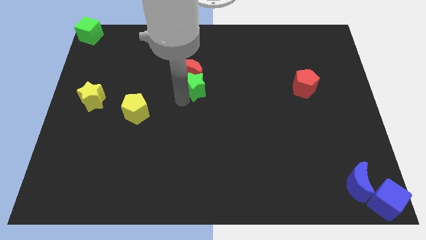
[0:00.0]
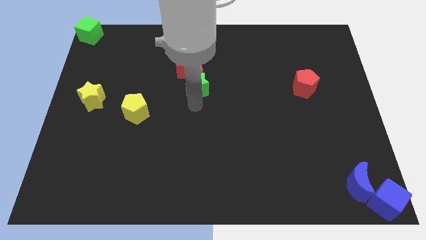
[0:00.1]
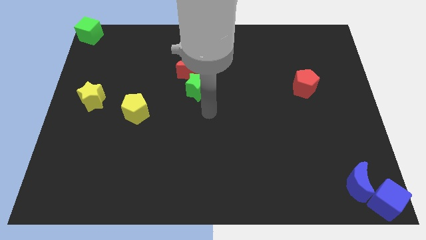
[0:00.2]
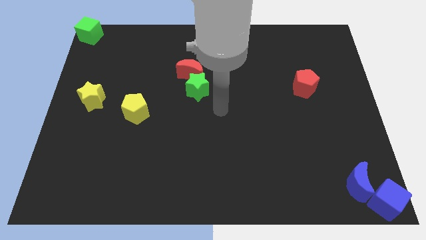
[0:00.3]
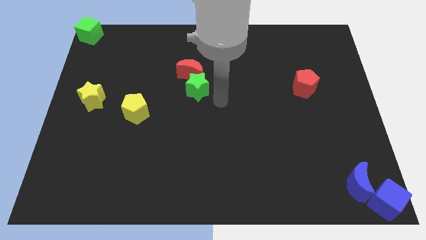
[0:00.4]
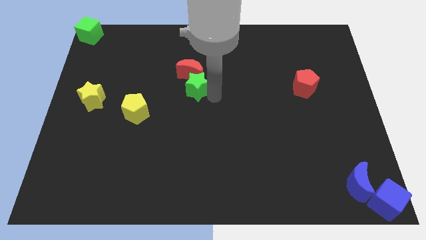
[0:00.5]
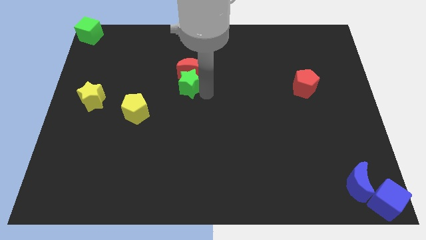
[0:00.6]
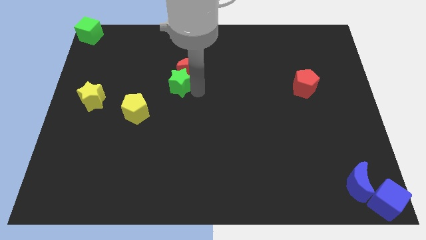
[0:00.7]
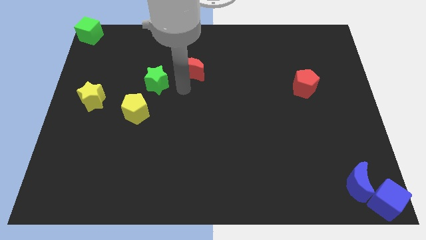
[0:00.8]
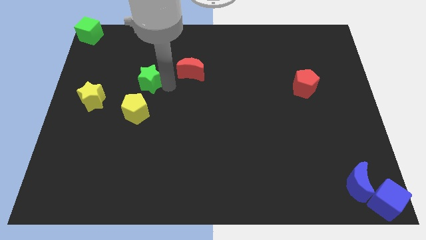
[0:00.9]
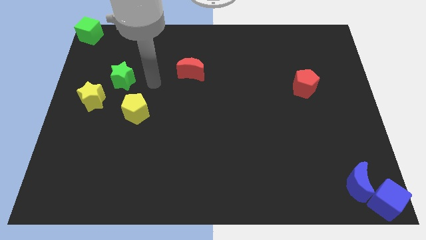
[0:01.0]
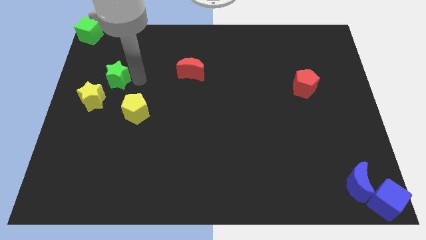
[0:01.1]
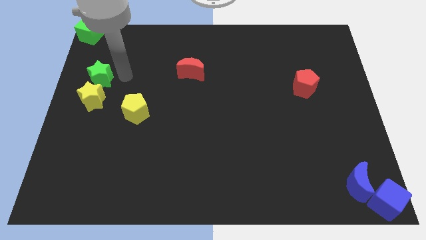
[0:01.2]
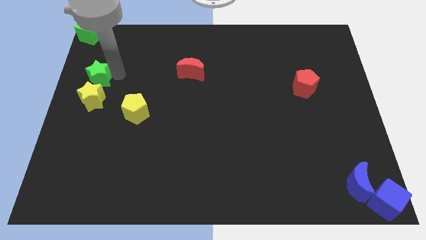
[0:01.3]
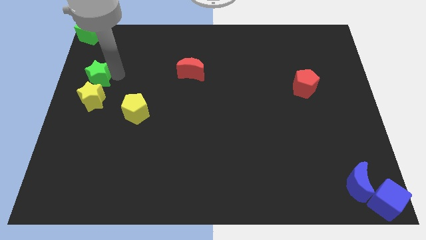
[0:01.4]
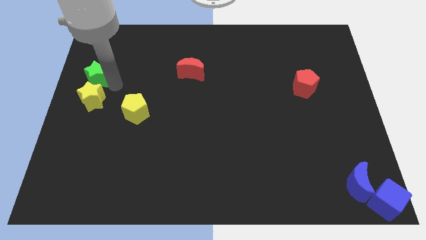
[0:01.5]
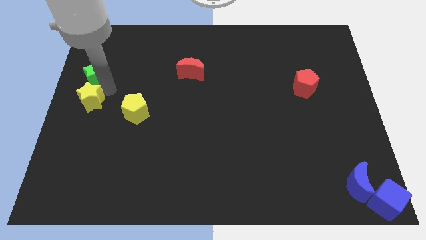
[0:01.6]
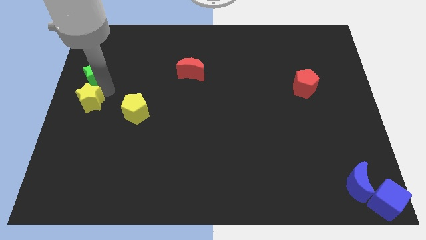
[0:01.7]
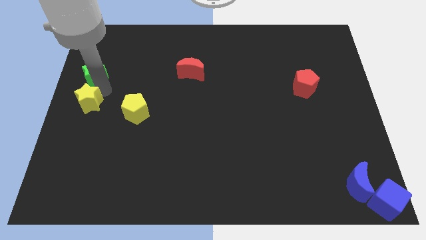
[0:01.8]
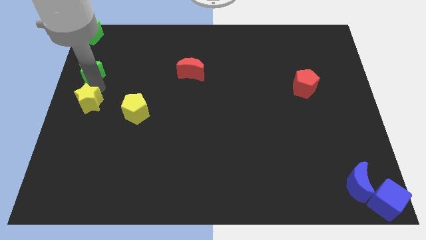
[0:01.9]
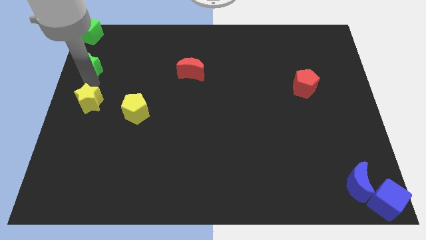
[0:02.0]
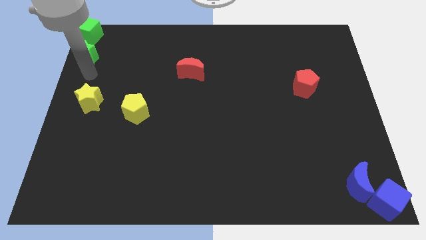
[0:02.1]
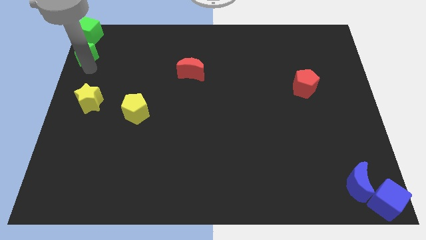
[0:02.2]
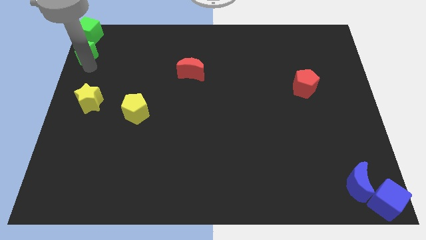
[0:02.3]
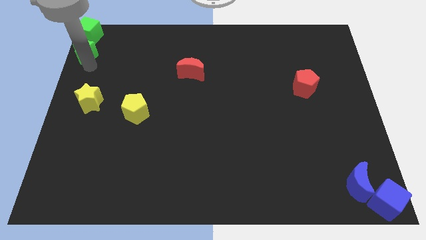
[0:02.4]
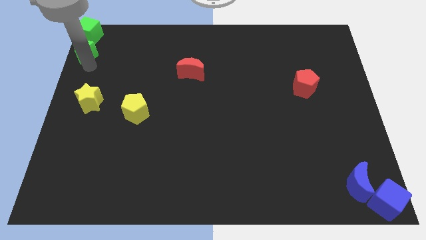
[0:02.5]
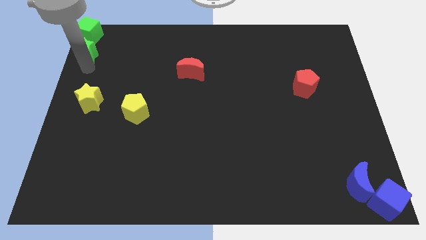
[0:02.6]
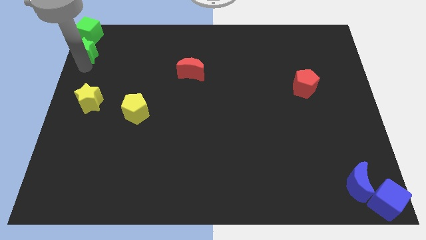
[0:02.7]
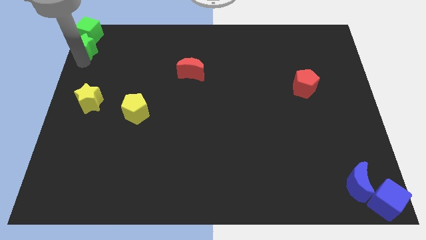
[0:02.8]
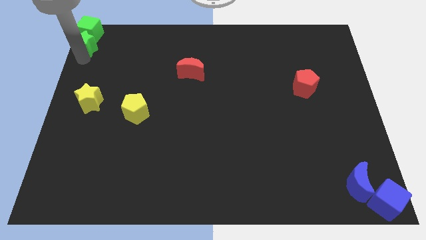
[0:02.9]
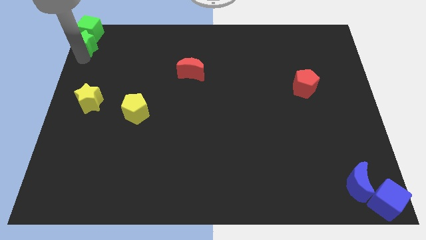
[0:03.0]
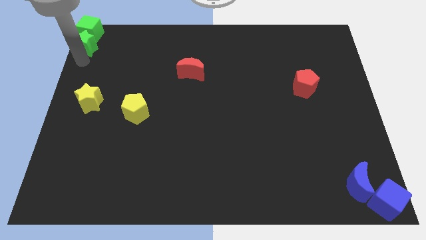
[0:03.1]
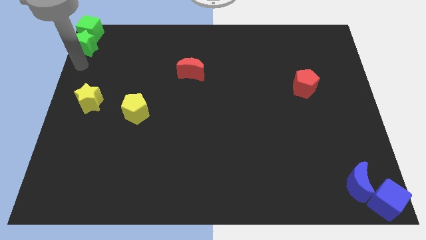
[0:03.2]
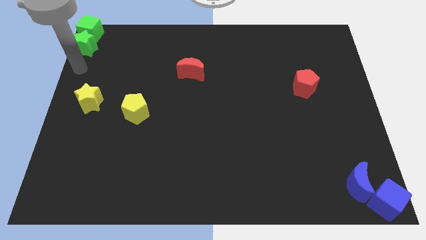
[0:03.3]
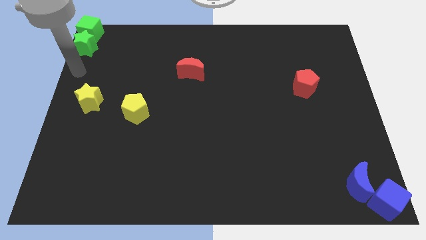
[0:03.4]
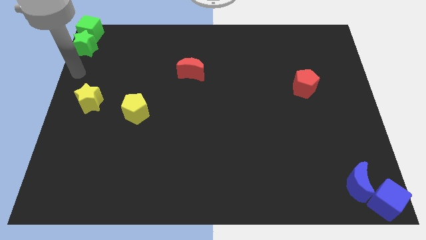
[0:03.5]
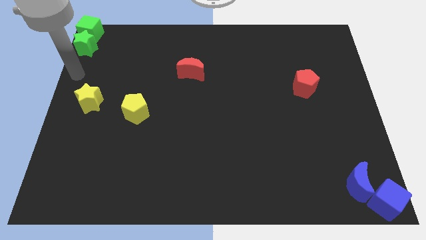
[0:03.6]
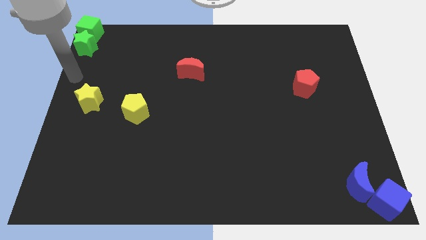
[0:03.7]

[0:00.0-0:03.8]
push green star in to green cube

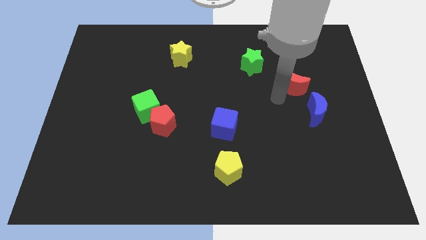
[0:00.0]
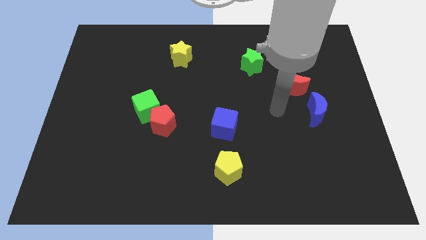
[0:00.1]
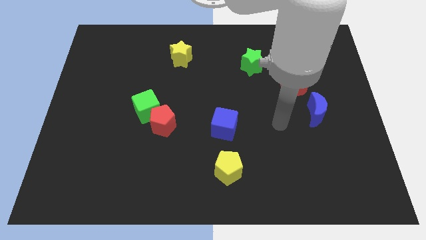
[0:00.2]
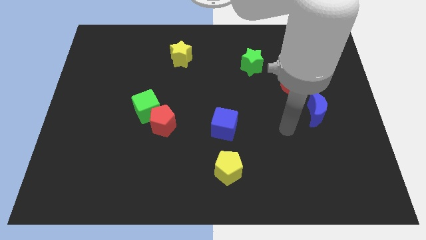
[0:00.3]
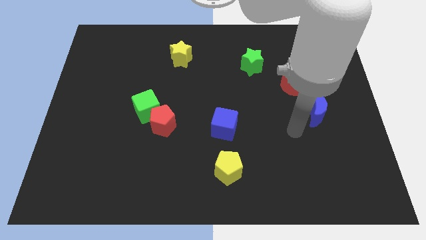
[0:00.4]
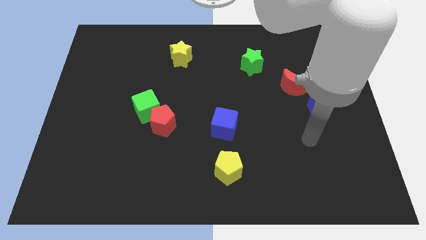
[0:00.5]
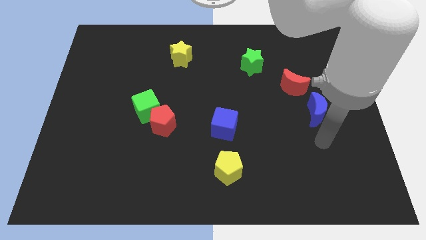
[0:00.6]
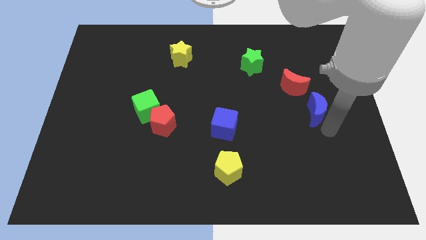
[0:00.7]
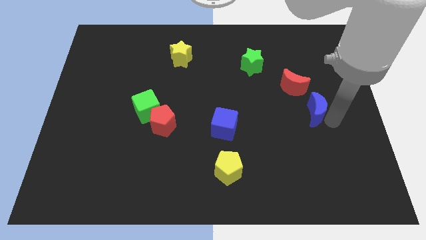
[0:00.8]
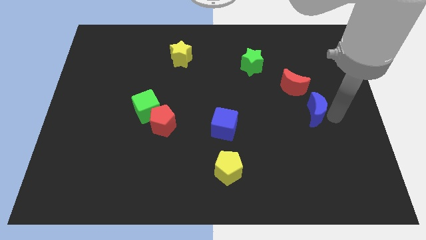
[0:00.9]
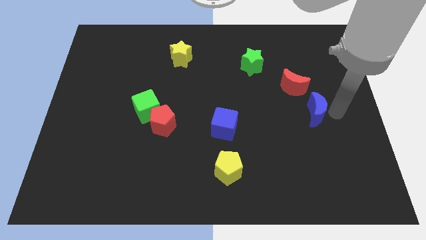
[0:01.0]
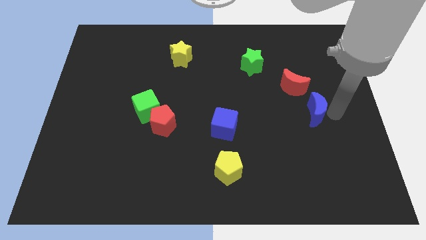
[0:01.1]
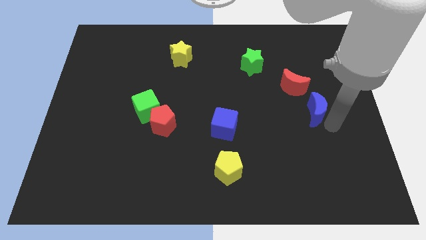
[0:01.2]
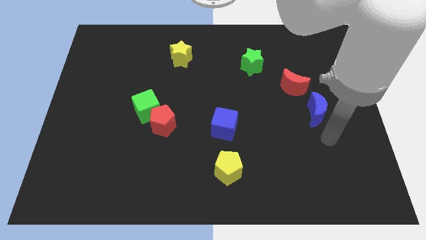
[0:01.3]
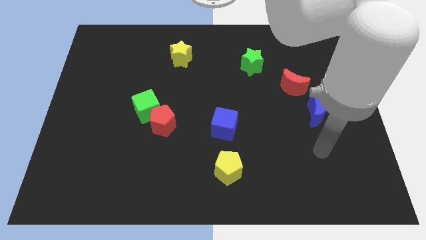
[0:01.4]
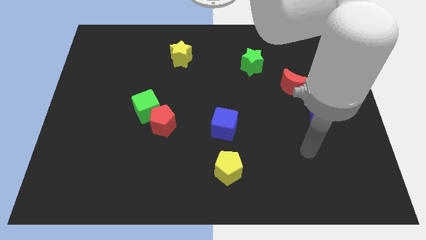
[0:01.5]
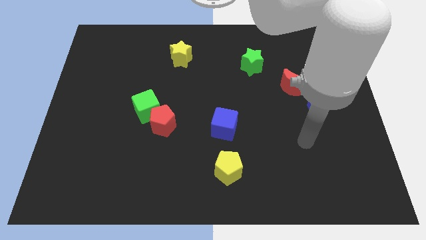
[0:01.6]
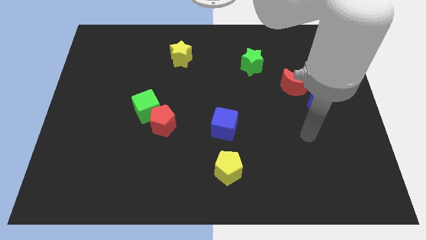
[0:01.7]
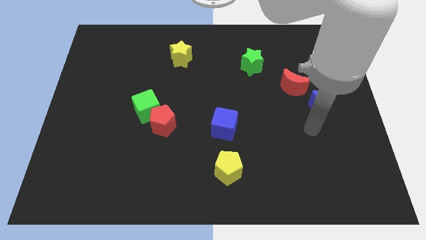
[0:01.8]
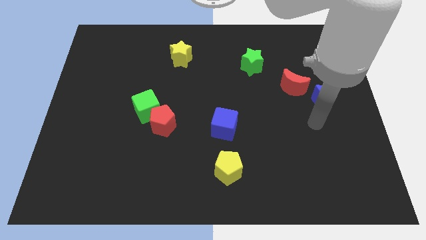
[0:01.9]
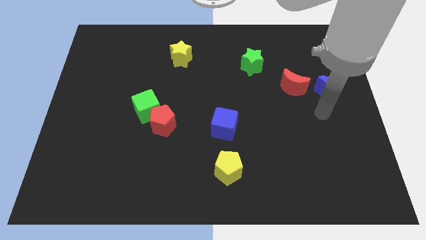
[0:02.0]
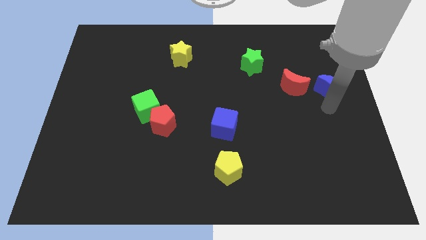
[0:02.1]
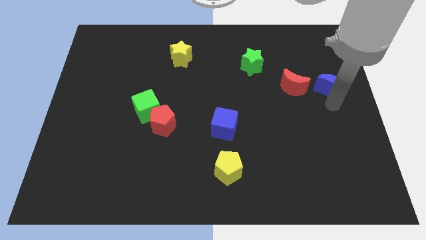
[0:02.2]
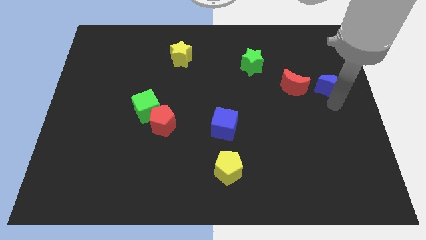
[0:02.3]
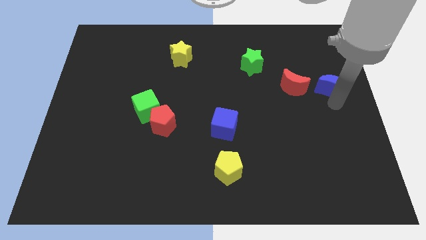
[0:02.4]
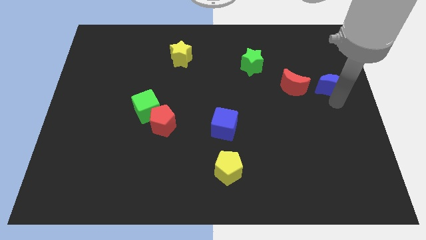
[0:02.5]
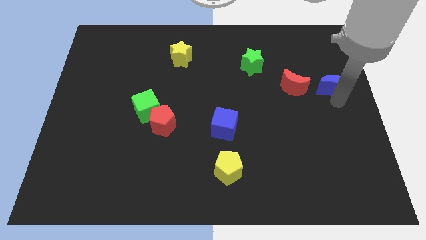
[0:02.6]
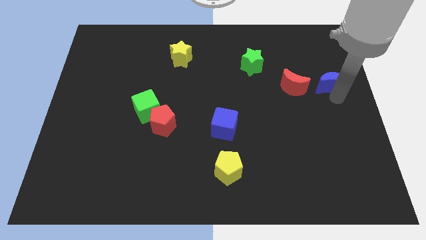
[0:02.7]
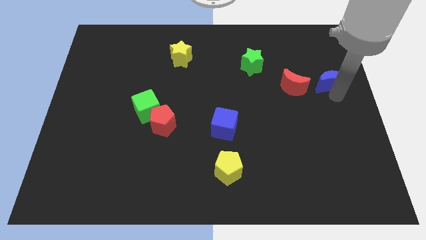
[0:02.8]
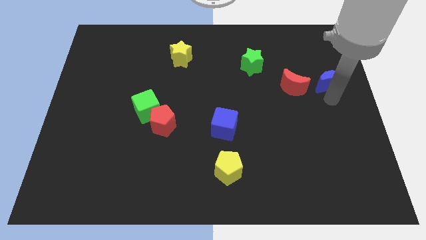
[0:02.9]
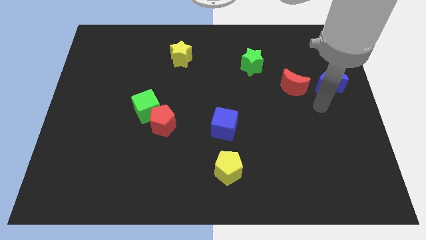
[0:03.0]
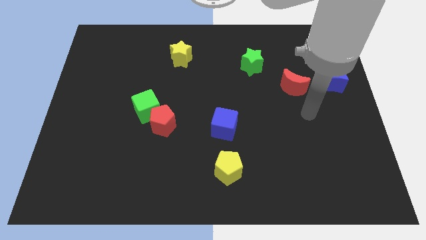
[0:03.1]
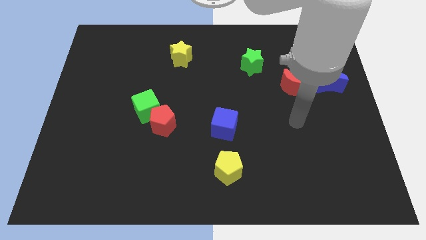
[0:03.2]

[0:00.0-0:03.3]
place the blue crescent to the right of the red moon

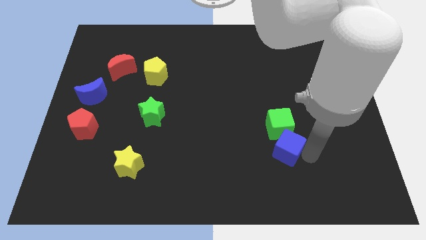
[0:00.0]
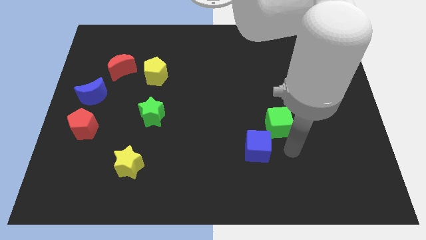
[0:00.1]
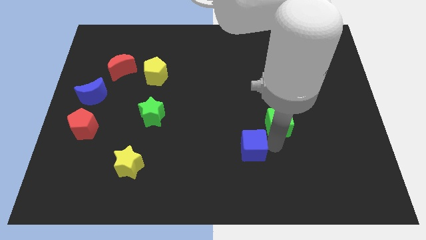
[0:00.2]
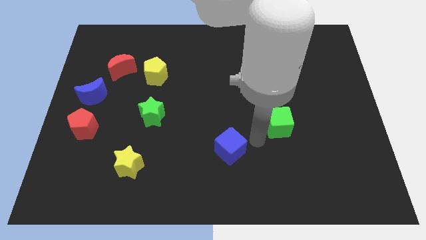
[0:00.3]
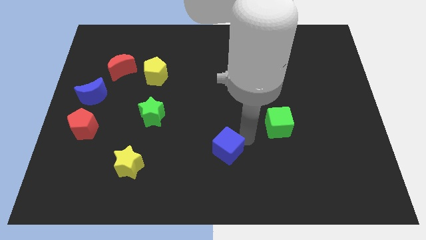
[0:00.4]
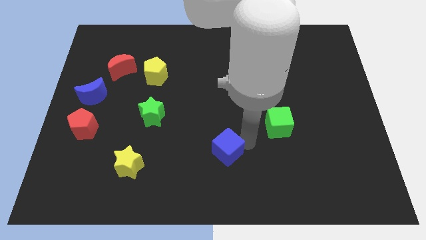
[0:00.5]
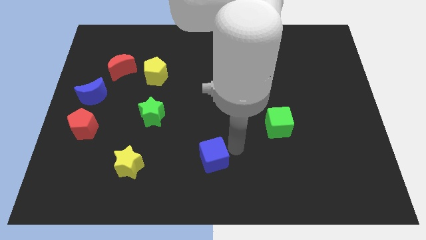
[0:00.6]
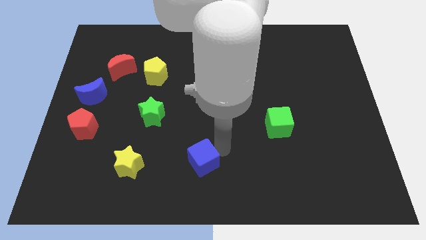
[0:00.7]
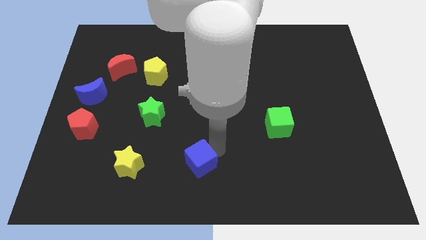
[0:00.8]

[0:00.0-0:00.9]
place the blue cube parallel to yellow star

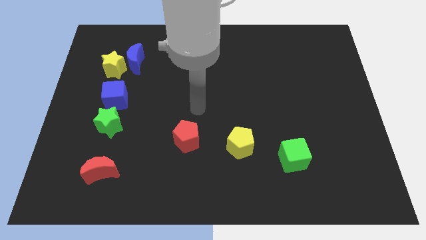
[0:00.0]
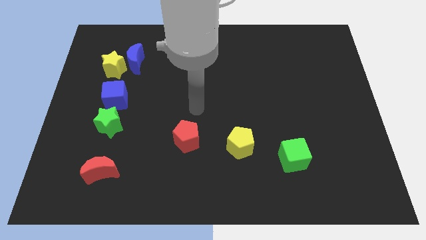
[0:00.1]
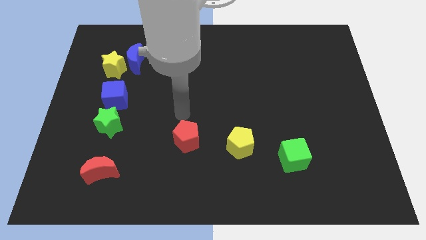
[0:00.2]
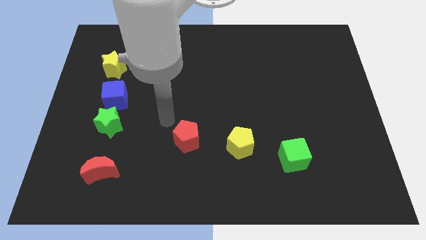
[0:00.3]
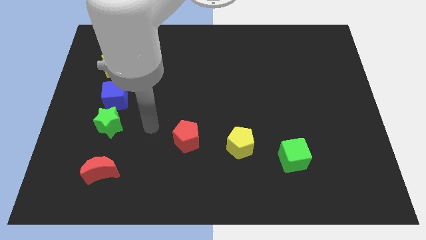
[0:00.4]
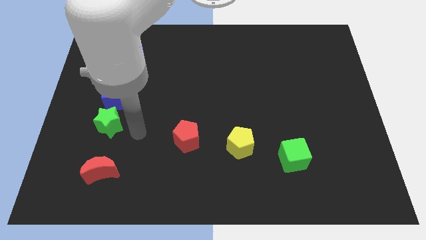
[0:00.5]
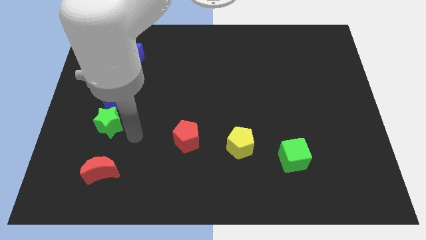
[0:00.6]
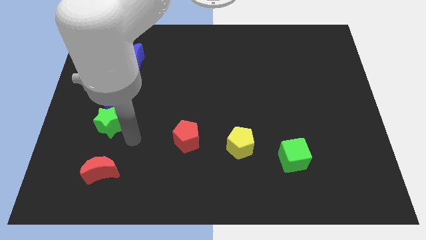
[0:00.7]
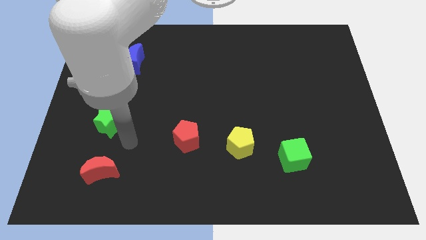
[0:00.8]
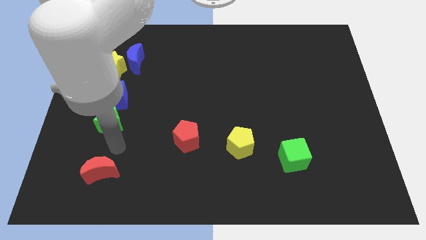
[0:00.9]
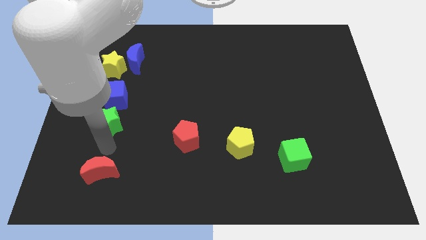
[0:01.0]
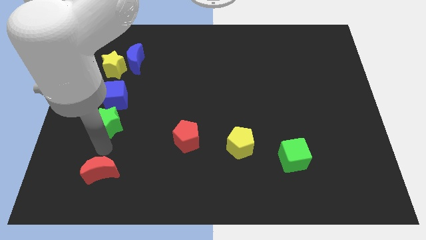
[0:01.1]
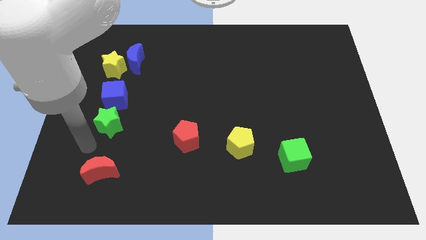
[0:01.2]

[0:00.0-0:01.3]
point your arm at the bottom side of the green star
